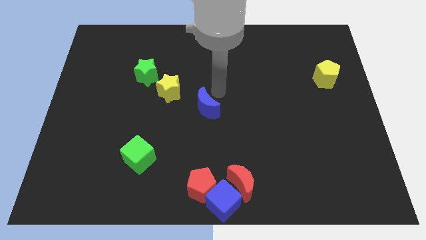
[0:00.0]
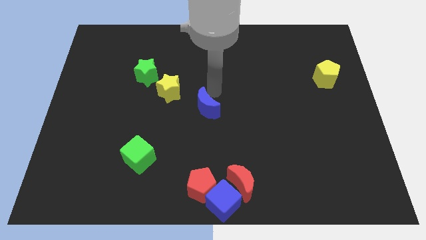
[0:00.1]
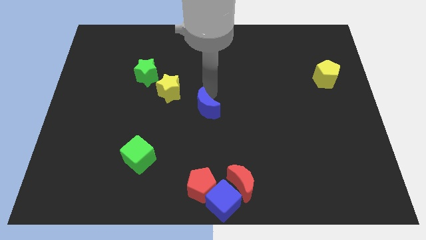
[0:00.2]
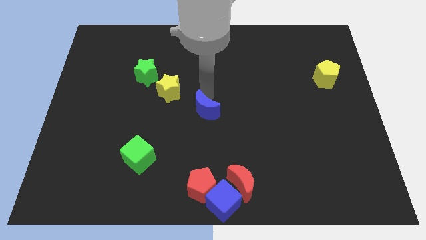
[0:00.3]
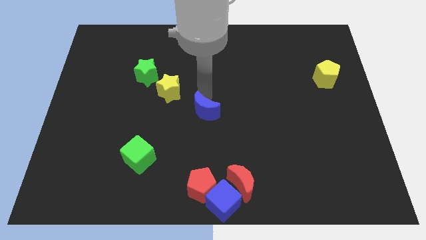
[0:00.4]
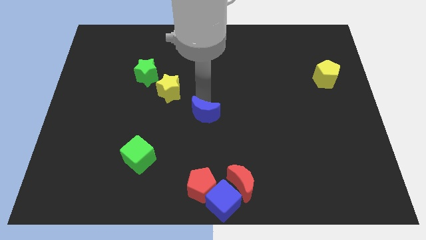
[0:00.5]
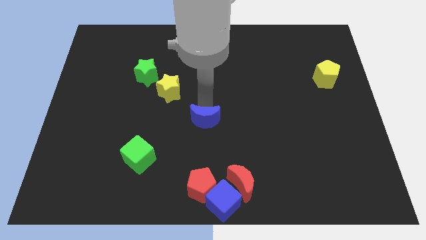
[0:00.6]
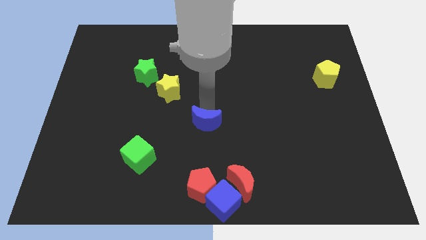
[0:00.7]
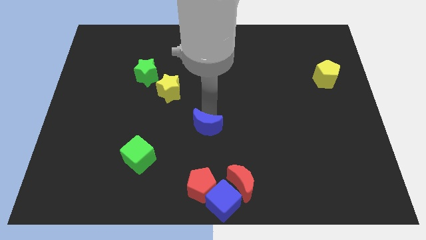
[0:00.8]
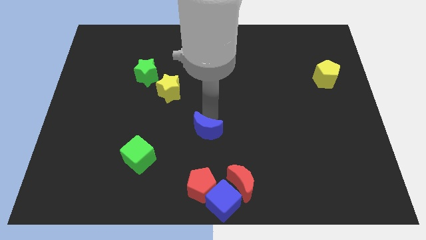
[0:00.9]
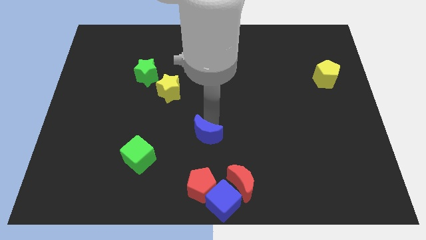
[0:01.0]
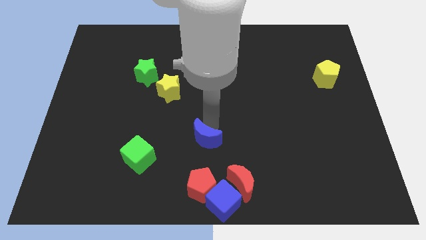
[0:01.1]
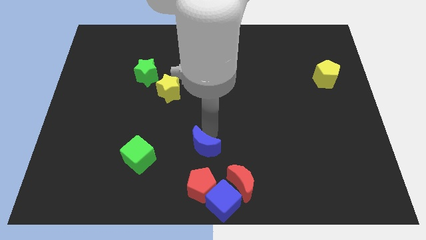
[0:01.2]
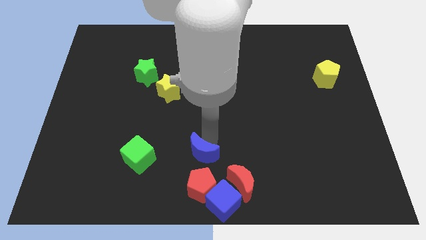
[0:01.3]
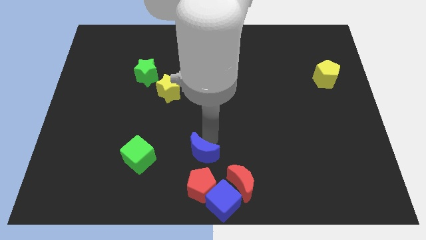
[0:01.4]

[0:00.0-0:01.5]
push the blue moon towards the red pentagon

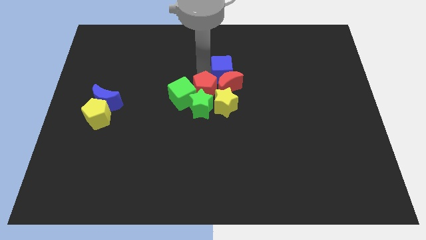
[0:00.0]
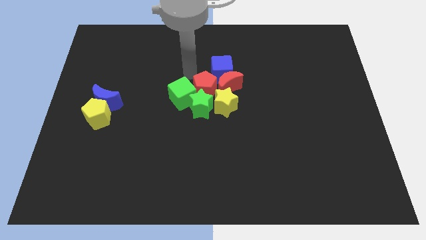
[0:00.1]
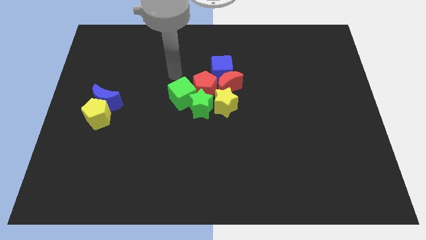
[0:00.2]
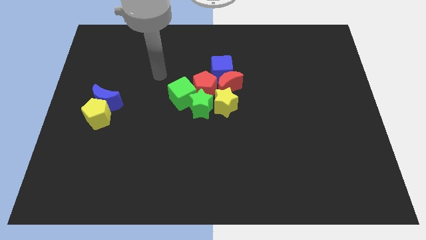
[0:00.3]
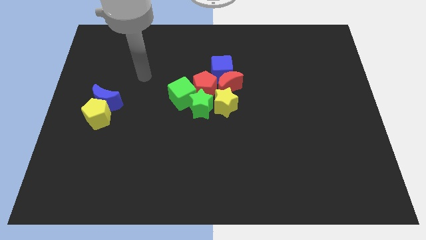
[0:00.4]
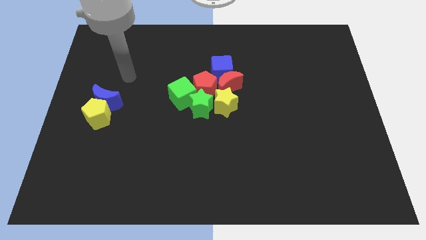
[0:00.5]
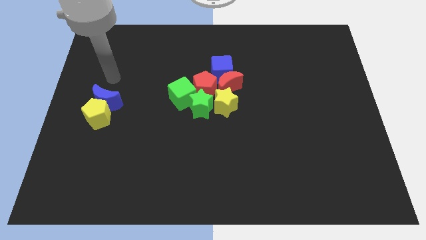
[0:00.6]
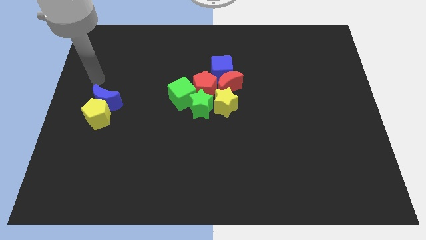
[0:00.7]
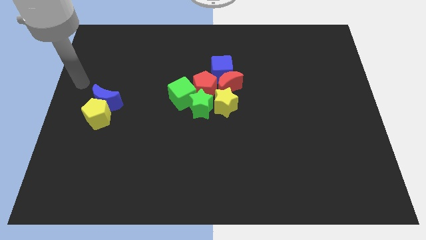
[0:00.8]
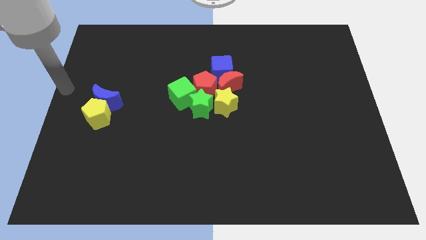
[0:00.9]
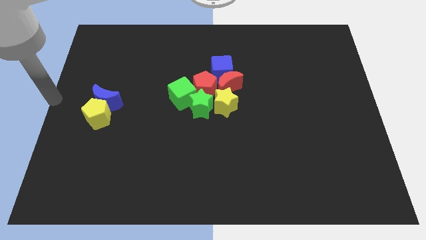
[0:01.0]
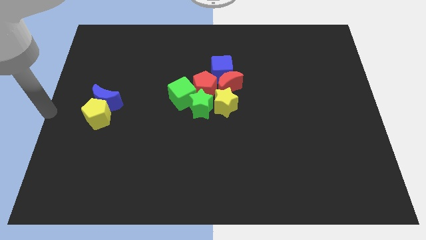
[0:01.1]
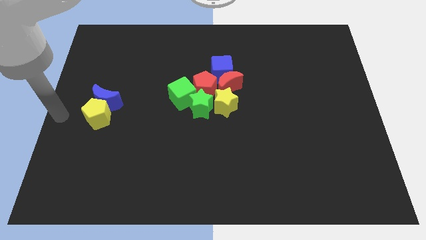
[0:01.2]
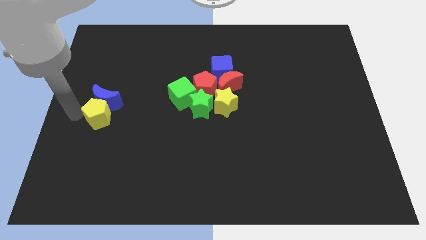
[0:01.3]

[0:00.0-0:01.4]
move your arm to the left of the yellow pentagon

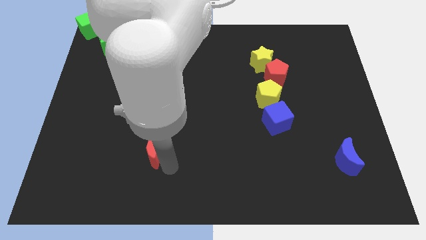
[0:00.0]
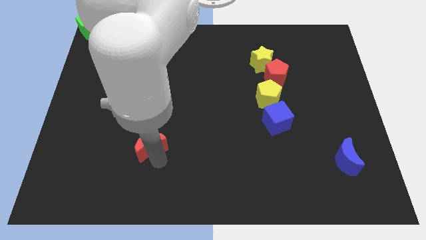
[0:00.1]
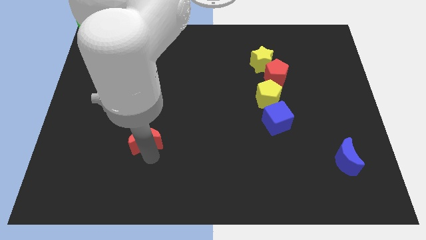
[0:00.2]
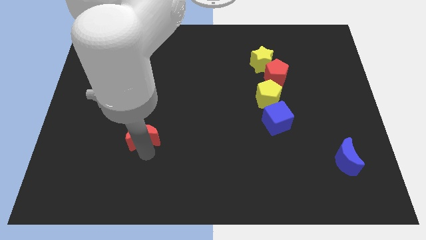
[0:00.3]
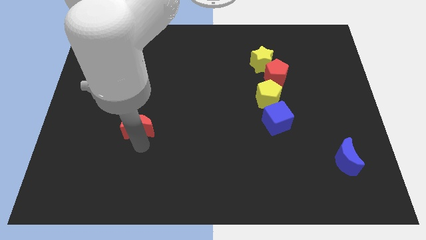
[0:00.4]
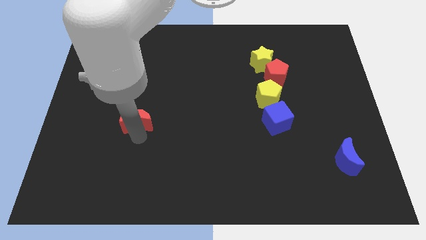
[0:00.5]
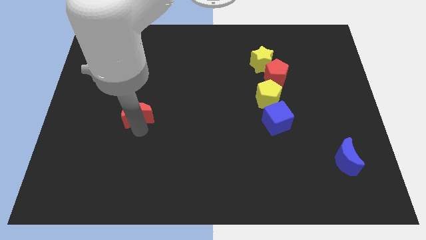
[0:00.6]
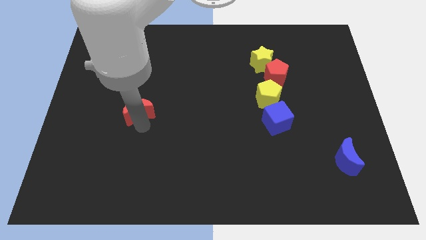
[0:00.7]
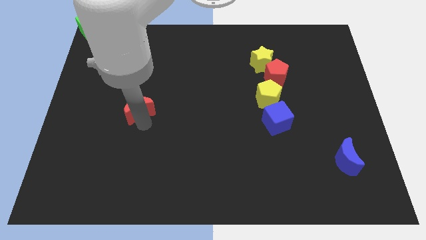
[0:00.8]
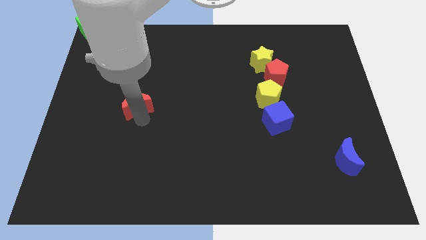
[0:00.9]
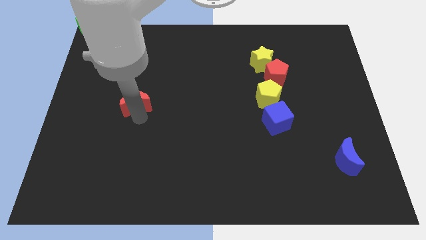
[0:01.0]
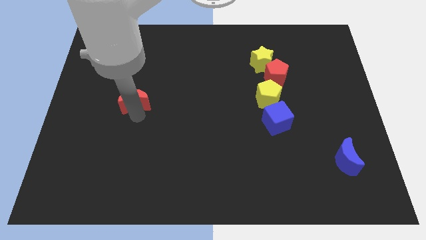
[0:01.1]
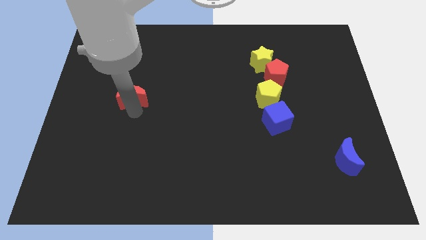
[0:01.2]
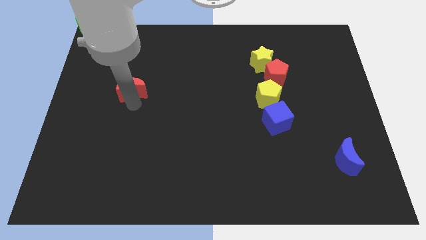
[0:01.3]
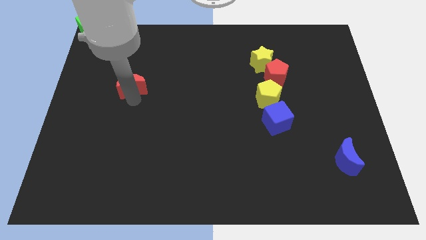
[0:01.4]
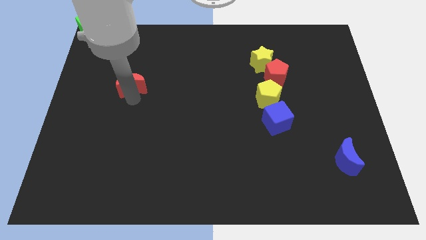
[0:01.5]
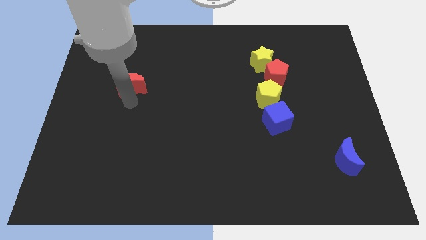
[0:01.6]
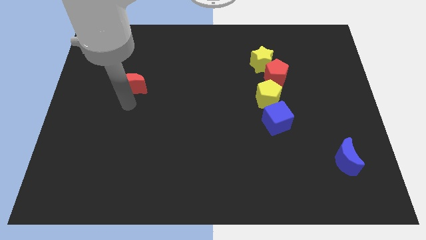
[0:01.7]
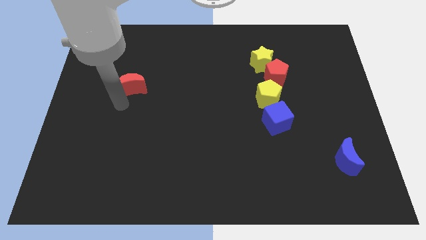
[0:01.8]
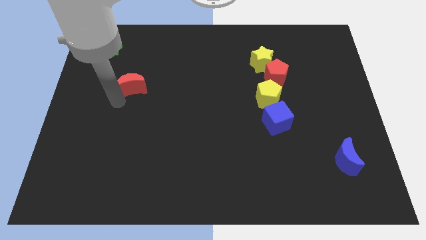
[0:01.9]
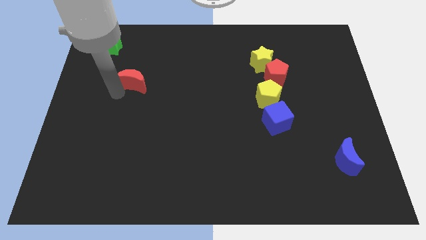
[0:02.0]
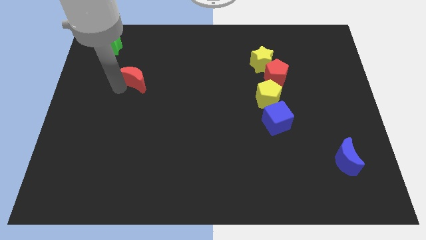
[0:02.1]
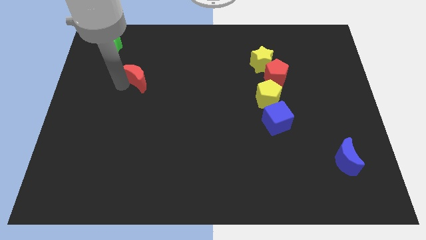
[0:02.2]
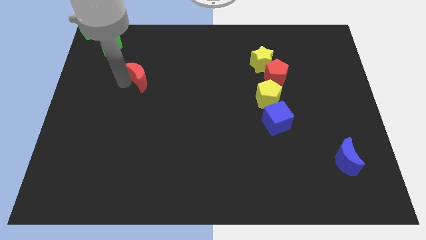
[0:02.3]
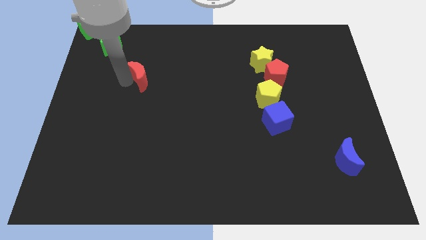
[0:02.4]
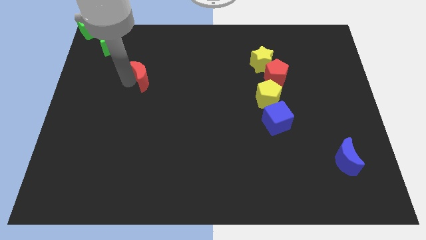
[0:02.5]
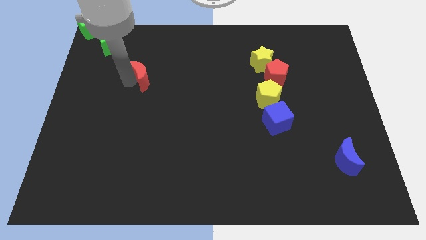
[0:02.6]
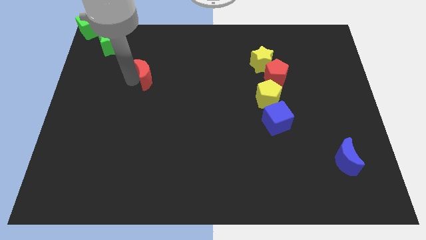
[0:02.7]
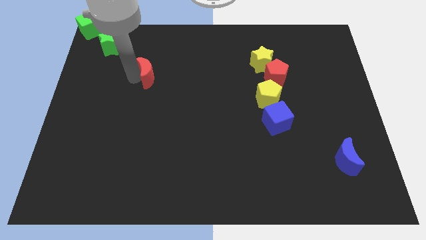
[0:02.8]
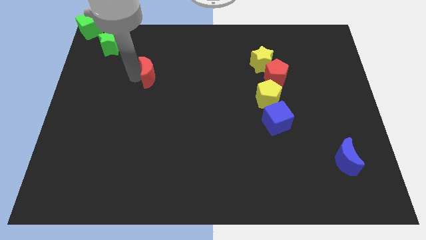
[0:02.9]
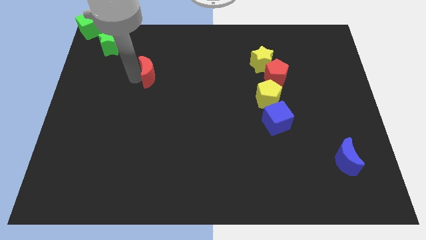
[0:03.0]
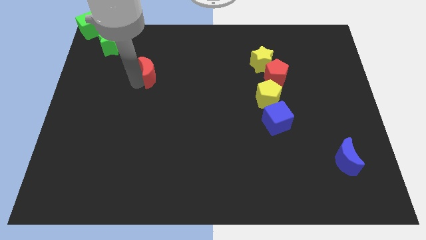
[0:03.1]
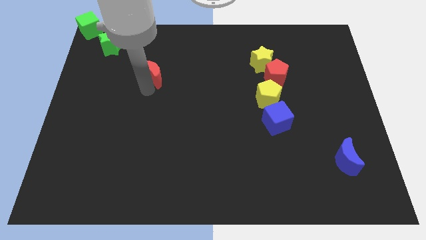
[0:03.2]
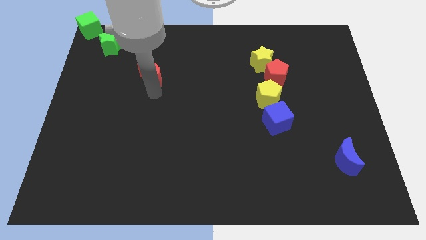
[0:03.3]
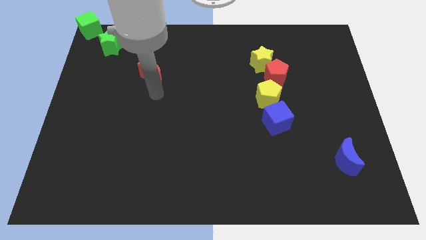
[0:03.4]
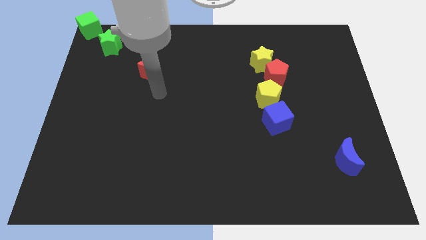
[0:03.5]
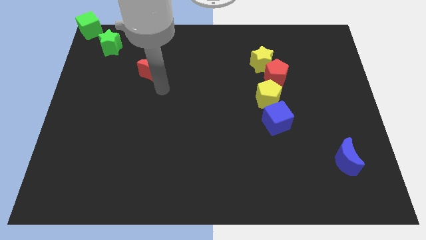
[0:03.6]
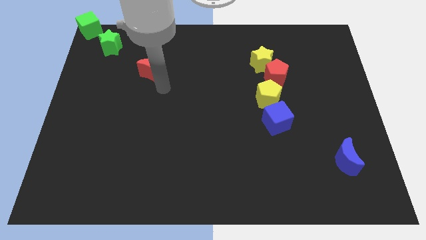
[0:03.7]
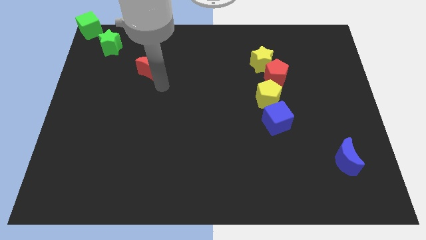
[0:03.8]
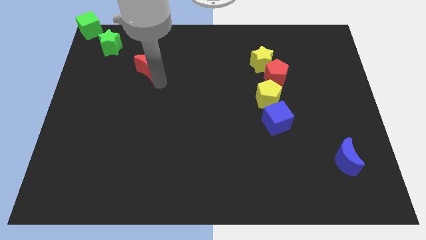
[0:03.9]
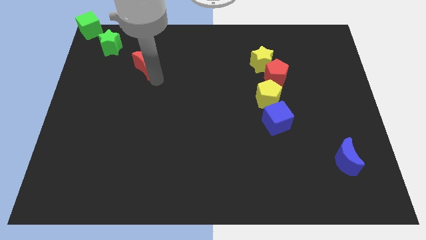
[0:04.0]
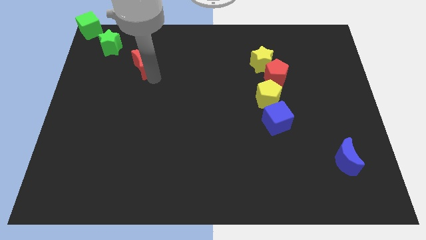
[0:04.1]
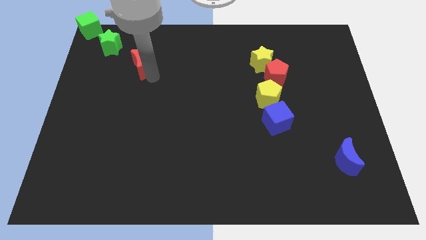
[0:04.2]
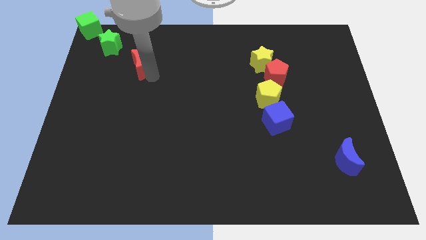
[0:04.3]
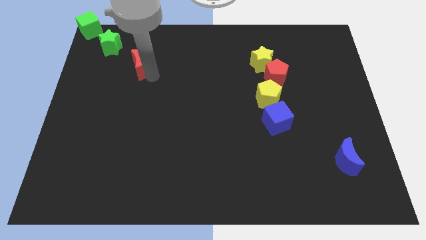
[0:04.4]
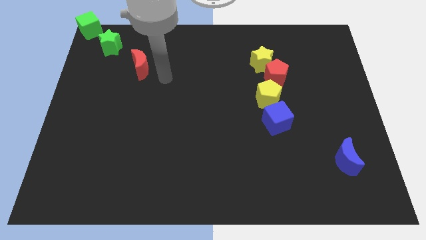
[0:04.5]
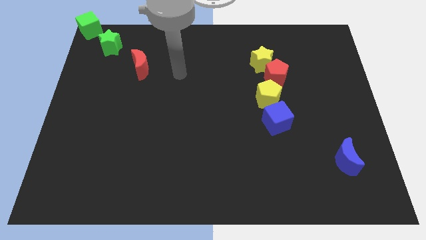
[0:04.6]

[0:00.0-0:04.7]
push the red crescent to the diagonally right to the green star

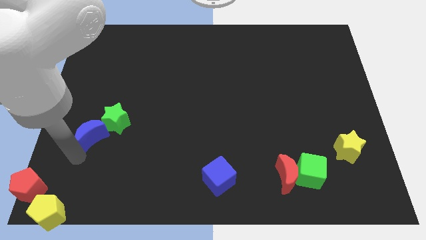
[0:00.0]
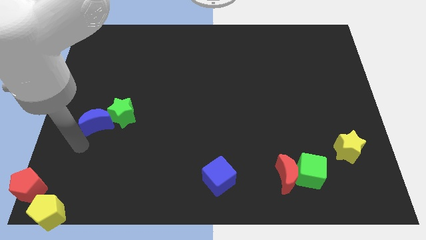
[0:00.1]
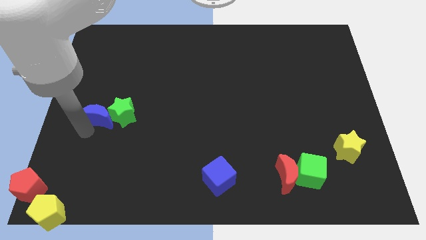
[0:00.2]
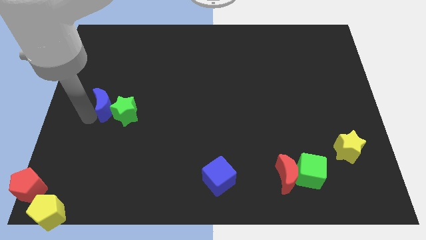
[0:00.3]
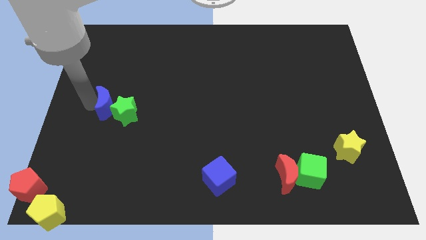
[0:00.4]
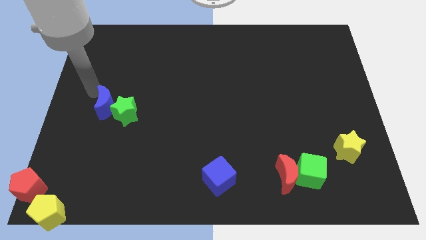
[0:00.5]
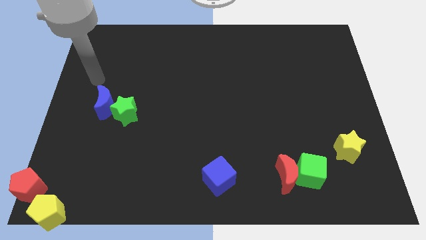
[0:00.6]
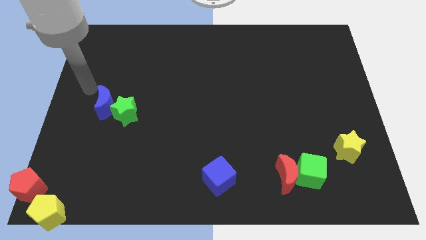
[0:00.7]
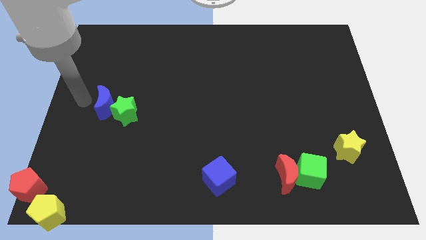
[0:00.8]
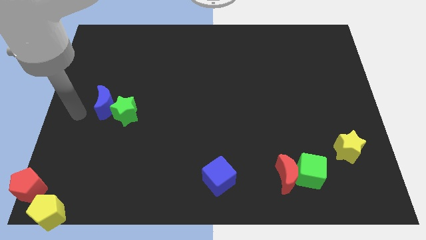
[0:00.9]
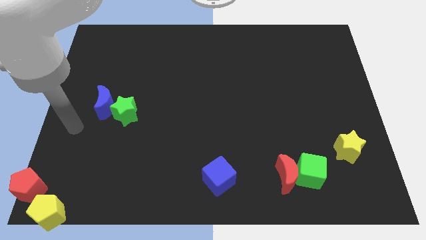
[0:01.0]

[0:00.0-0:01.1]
place the blue crescent left side of the green star

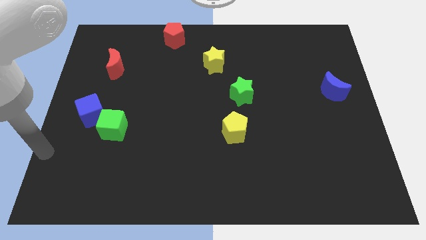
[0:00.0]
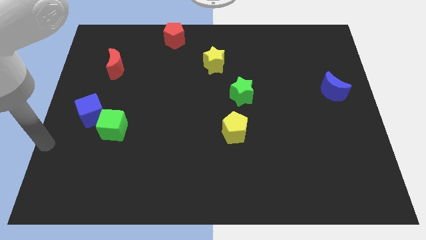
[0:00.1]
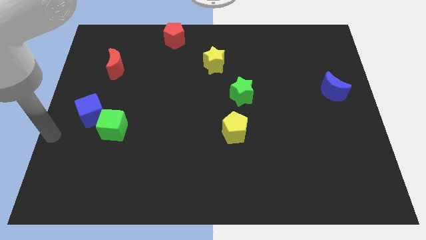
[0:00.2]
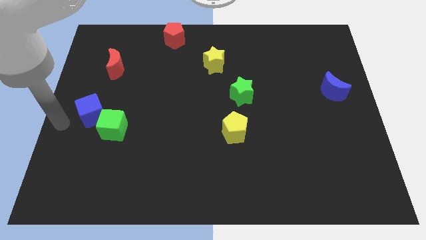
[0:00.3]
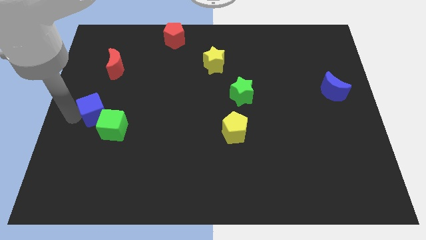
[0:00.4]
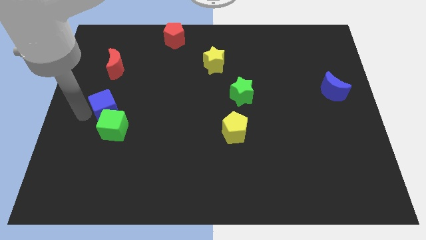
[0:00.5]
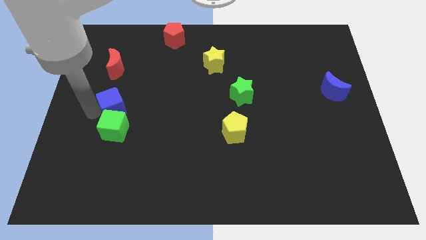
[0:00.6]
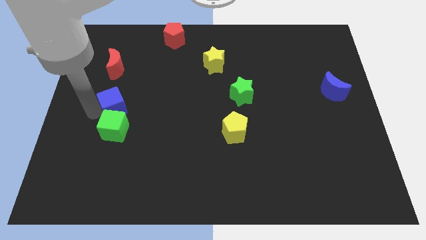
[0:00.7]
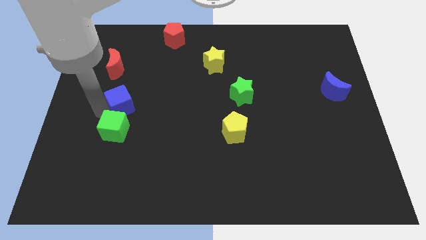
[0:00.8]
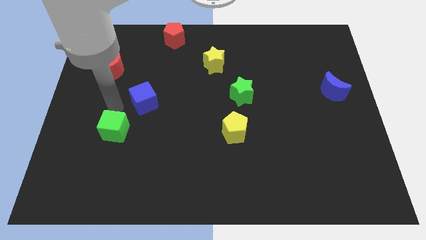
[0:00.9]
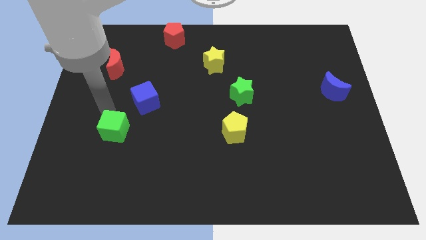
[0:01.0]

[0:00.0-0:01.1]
move blue cube to the top right of green cube
